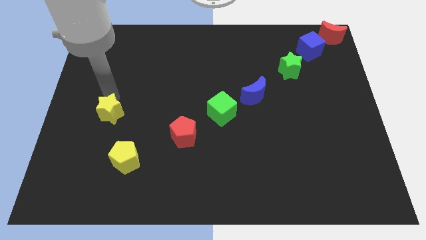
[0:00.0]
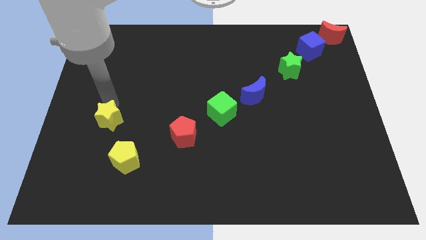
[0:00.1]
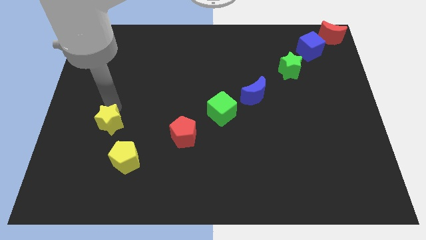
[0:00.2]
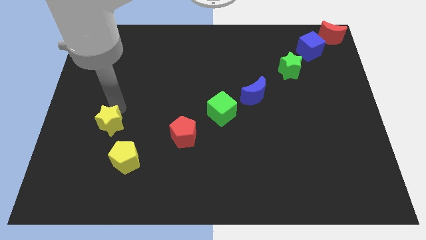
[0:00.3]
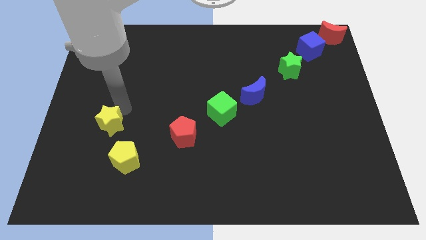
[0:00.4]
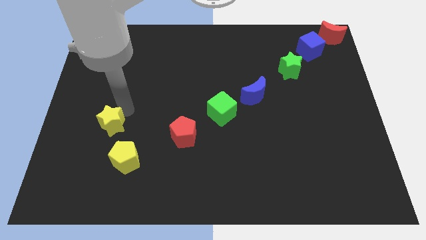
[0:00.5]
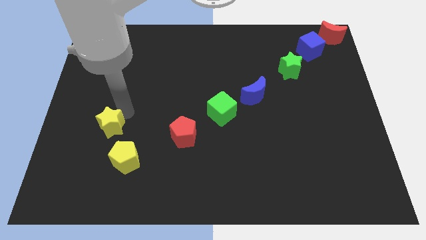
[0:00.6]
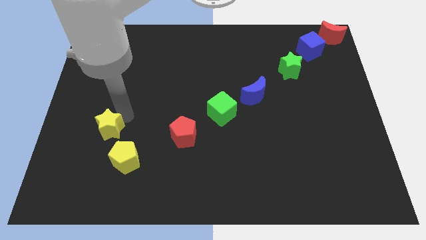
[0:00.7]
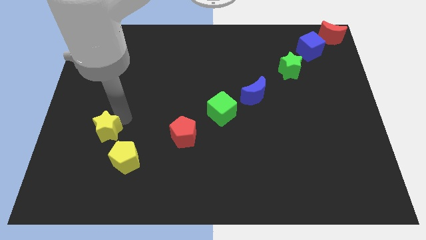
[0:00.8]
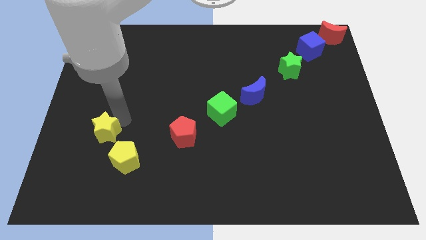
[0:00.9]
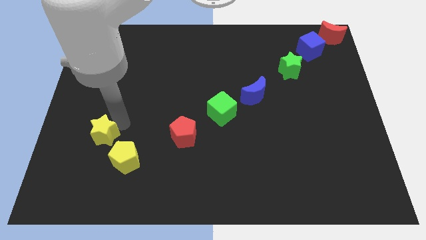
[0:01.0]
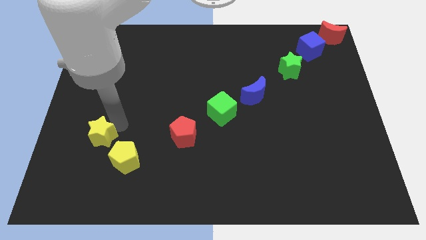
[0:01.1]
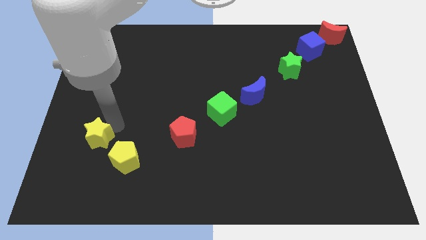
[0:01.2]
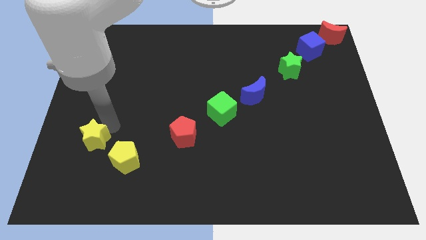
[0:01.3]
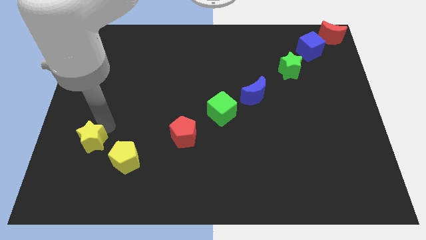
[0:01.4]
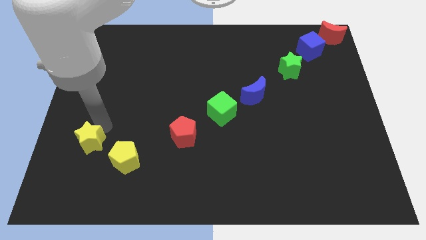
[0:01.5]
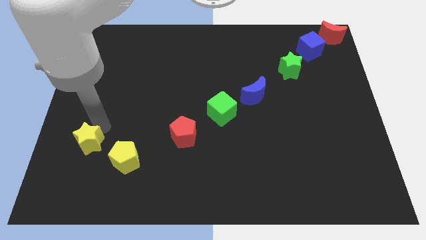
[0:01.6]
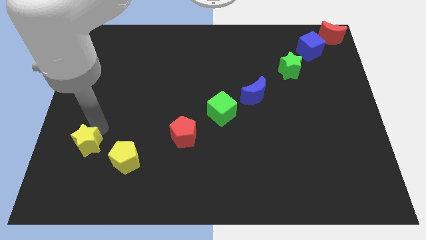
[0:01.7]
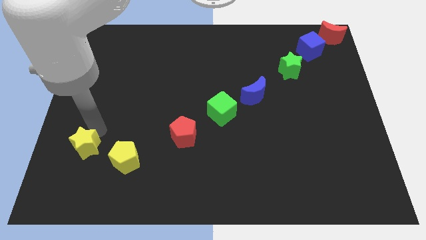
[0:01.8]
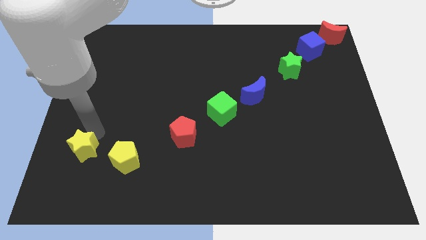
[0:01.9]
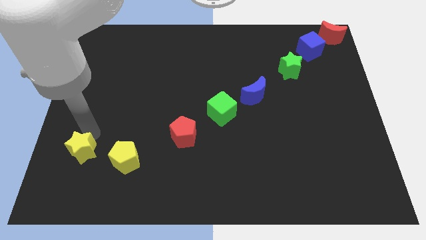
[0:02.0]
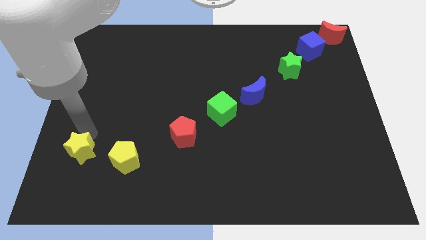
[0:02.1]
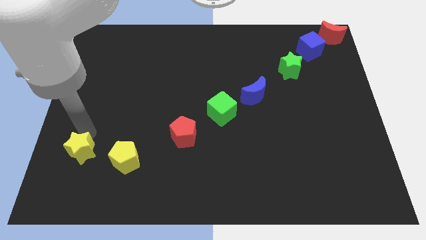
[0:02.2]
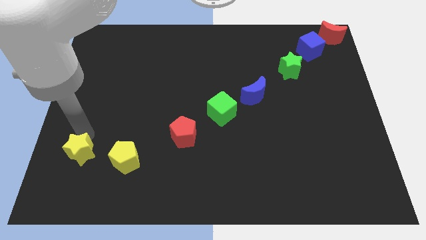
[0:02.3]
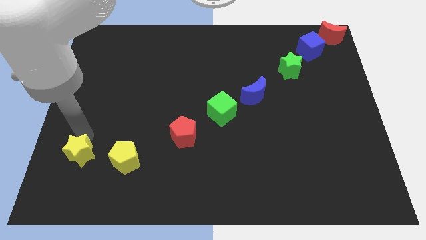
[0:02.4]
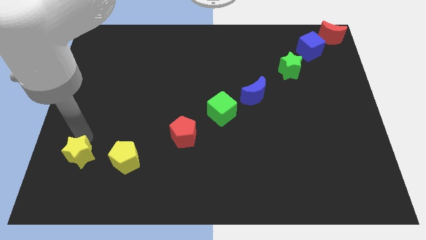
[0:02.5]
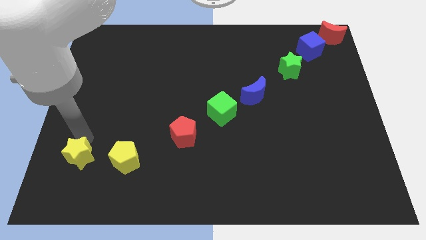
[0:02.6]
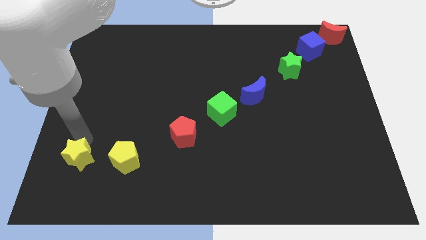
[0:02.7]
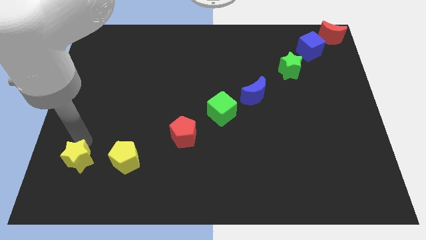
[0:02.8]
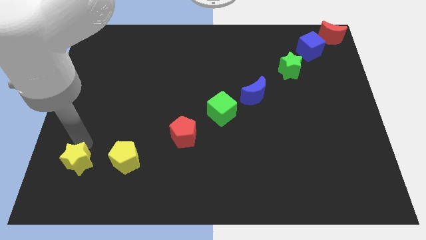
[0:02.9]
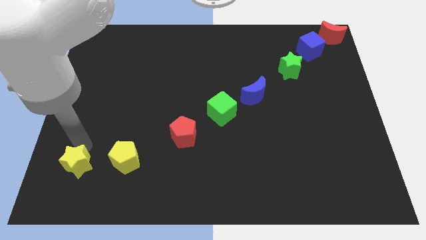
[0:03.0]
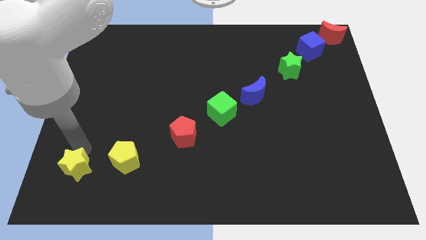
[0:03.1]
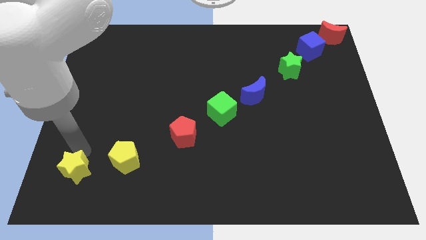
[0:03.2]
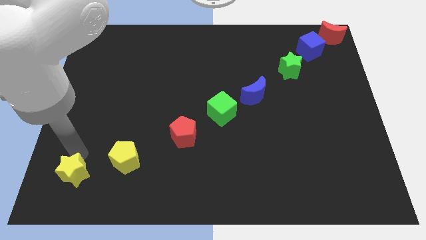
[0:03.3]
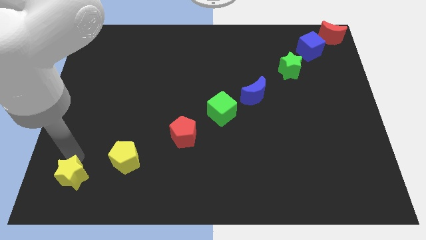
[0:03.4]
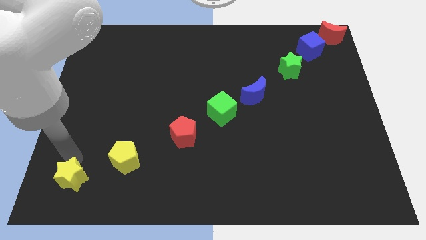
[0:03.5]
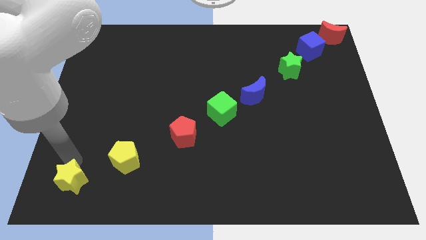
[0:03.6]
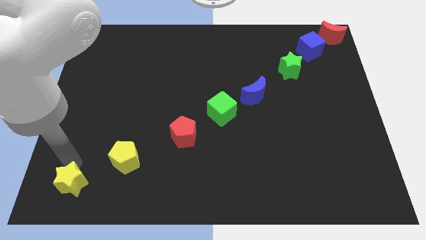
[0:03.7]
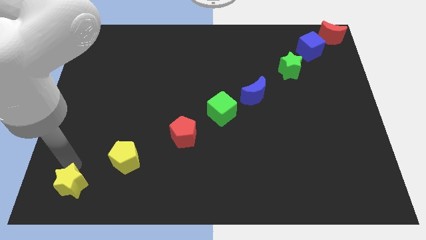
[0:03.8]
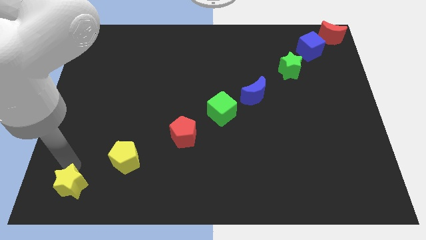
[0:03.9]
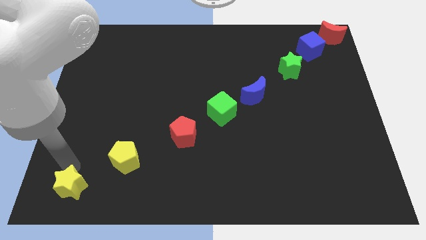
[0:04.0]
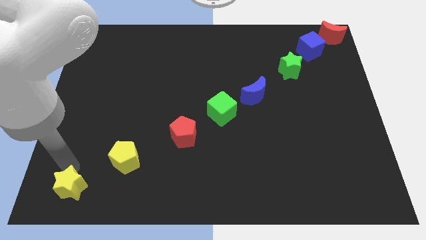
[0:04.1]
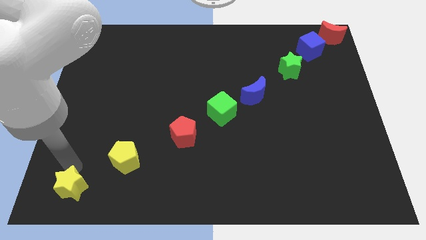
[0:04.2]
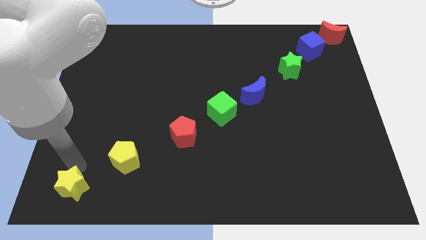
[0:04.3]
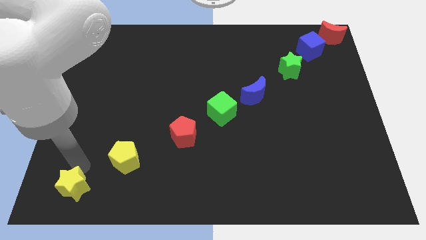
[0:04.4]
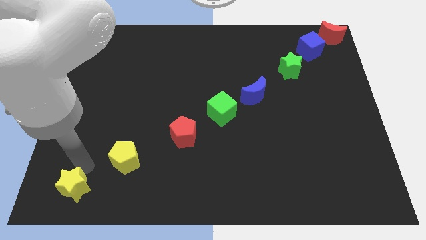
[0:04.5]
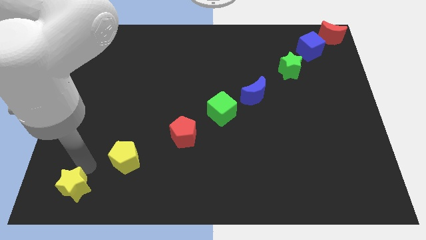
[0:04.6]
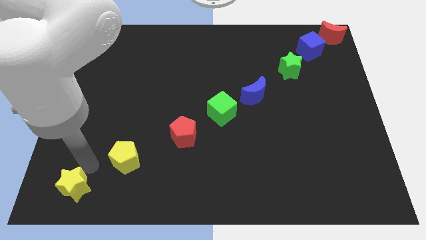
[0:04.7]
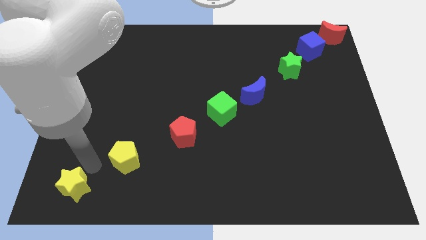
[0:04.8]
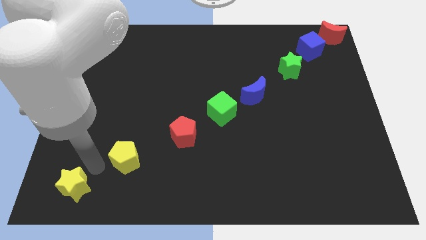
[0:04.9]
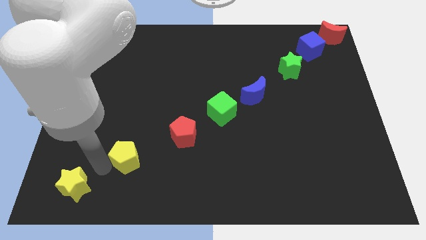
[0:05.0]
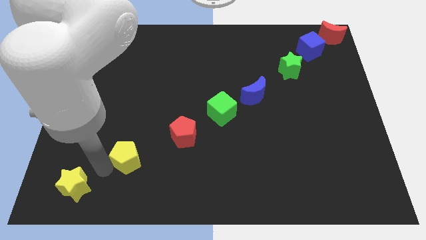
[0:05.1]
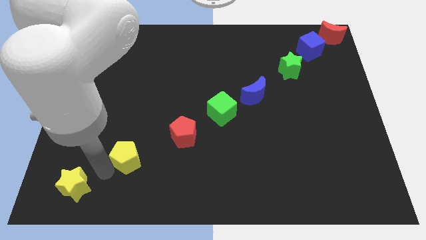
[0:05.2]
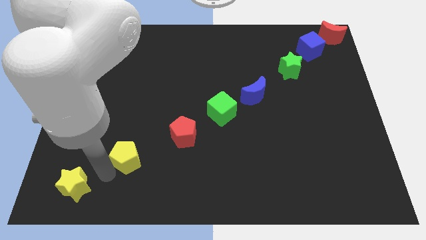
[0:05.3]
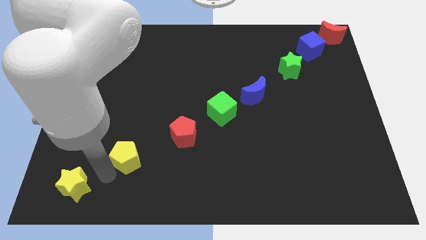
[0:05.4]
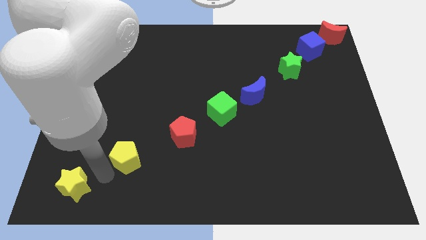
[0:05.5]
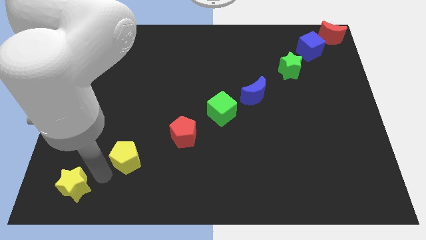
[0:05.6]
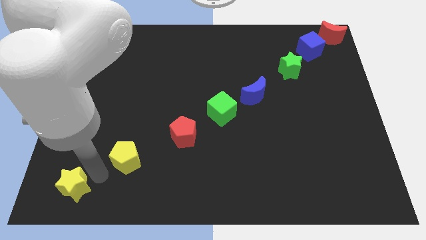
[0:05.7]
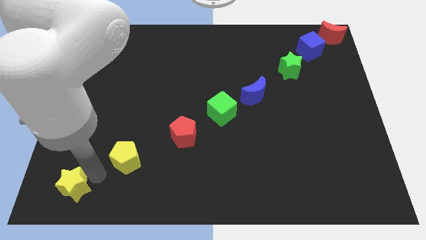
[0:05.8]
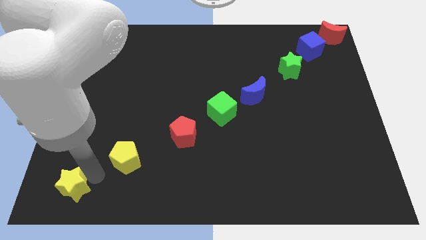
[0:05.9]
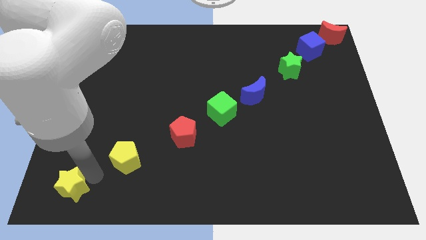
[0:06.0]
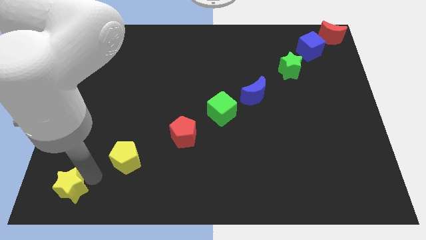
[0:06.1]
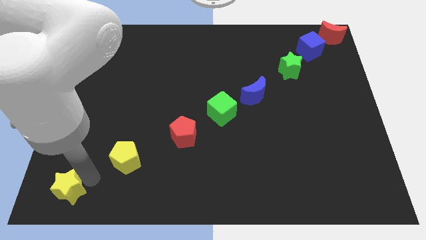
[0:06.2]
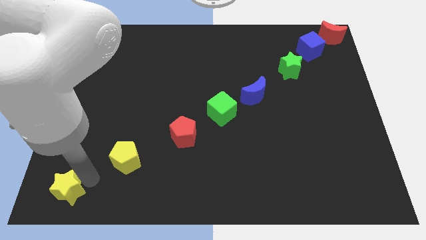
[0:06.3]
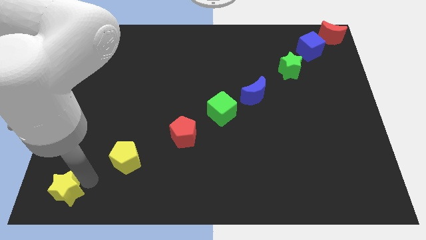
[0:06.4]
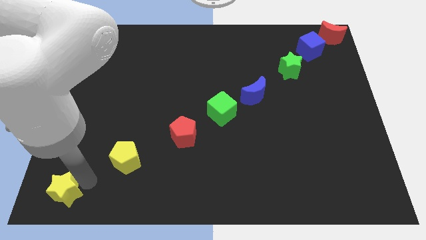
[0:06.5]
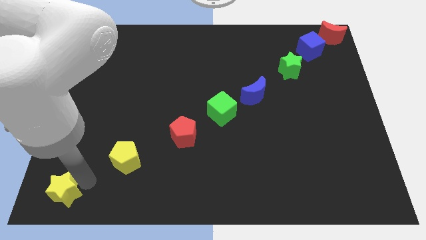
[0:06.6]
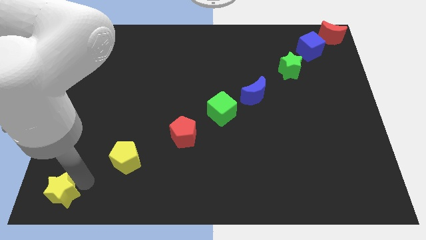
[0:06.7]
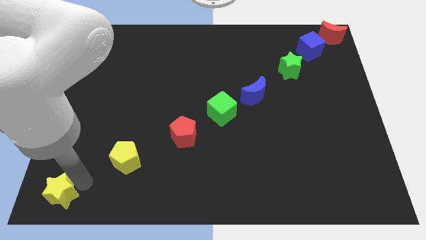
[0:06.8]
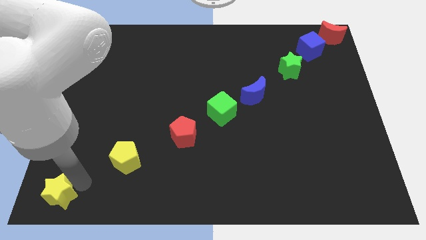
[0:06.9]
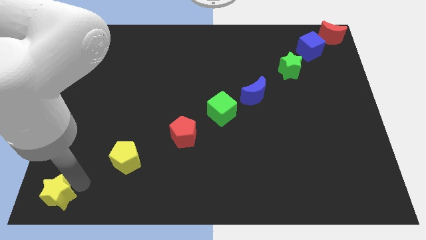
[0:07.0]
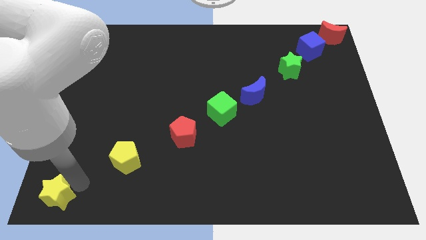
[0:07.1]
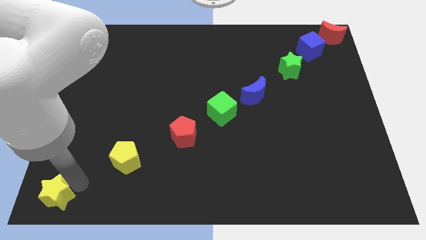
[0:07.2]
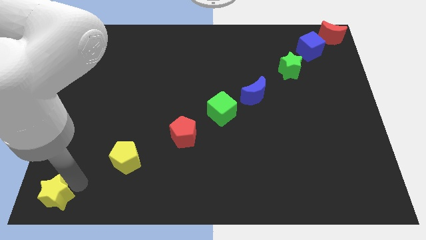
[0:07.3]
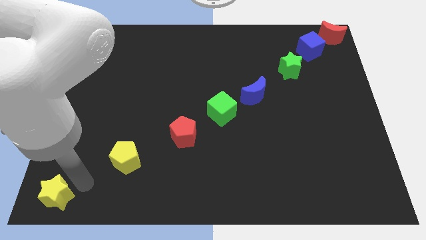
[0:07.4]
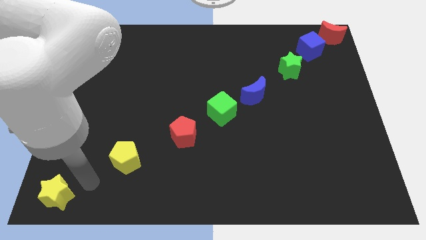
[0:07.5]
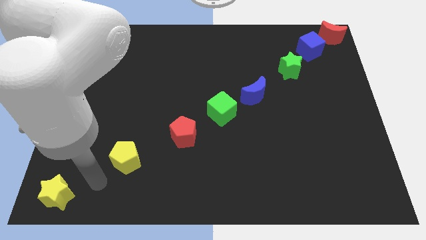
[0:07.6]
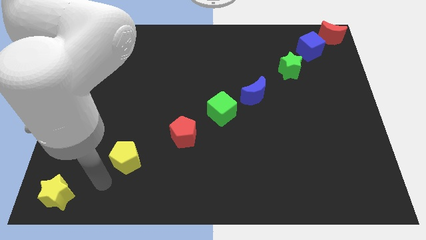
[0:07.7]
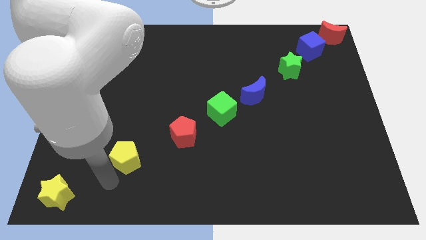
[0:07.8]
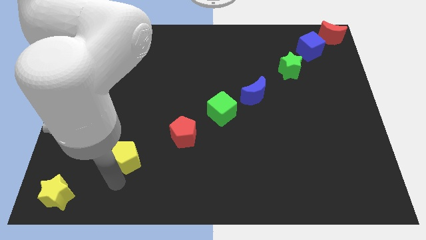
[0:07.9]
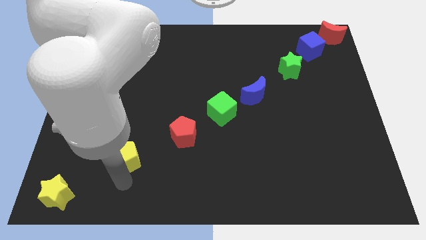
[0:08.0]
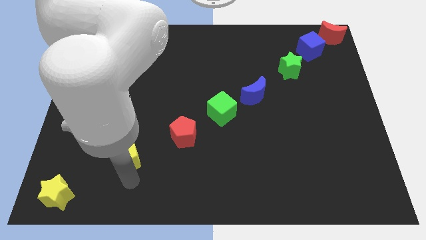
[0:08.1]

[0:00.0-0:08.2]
push the yellow star diagonal to the left of the yellow pentagon

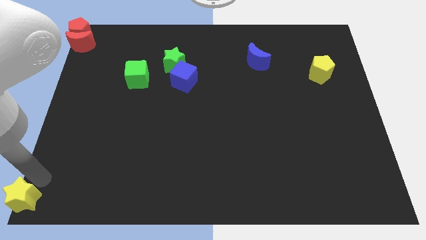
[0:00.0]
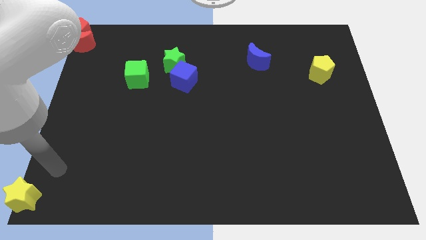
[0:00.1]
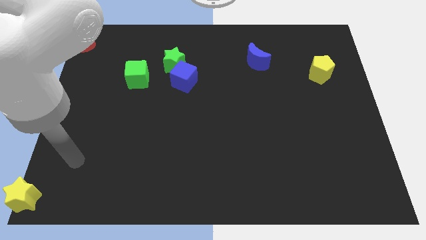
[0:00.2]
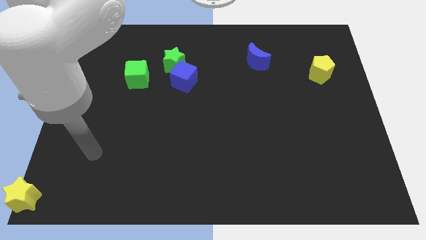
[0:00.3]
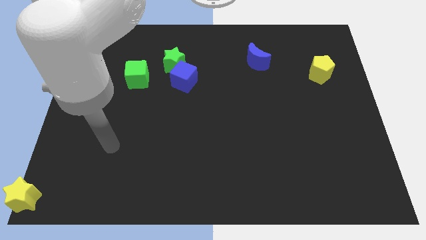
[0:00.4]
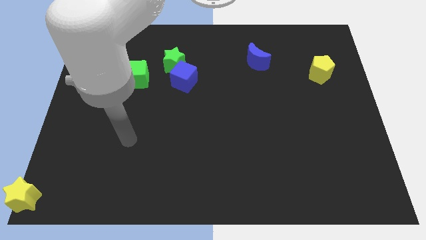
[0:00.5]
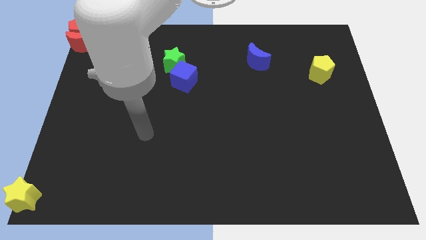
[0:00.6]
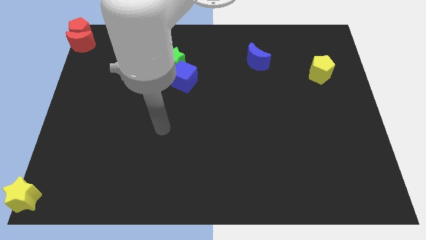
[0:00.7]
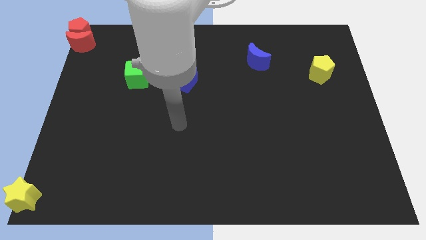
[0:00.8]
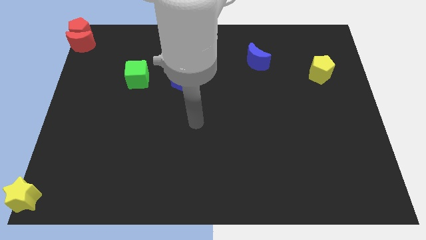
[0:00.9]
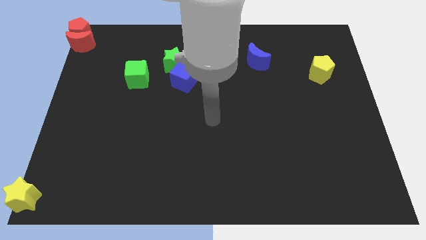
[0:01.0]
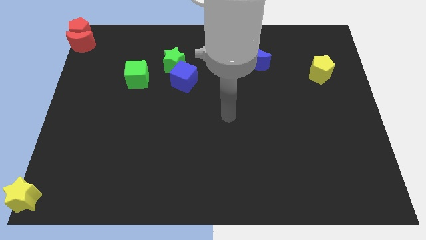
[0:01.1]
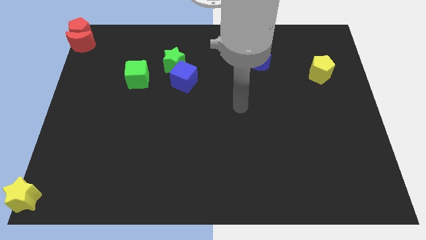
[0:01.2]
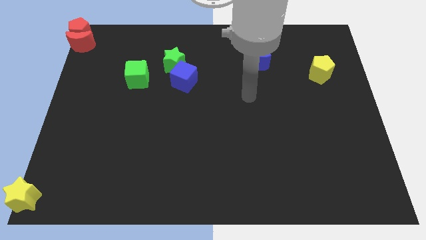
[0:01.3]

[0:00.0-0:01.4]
move the arm away from the yellow star
